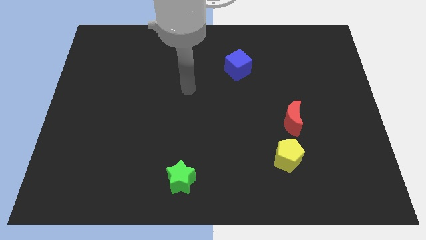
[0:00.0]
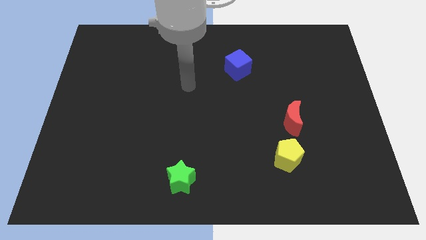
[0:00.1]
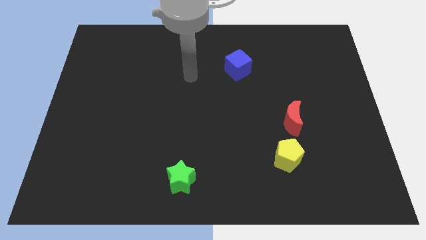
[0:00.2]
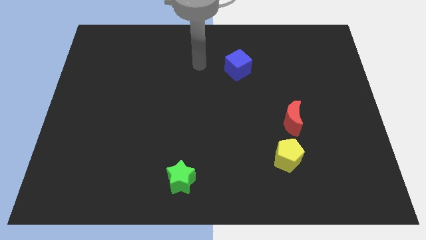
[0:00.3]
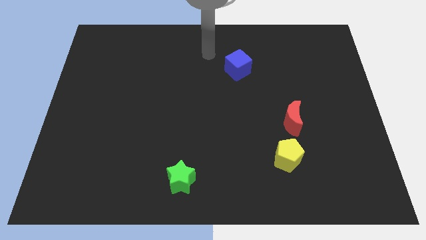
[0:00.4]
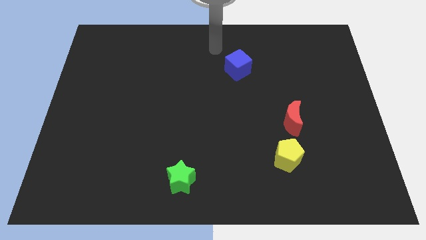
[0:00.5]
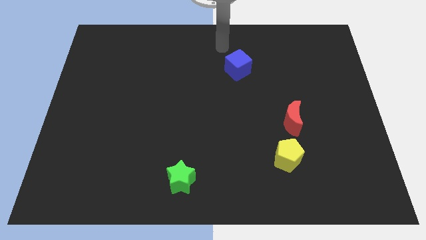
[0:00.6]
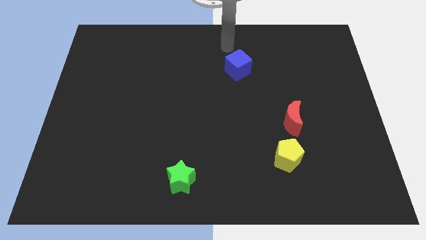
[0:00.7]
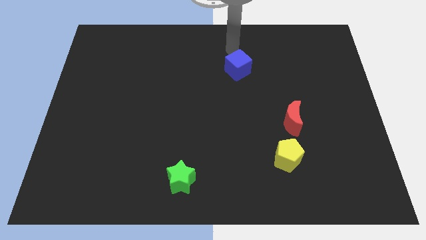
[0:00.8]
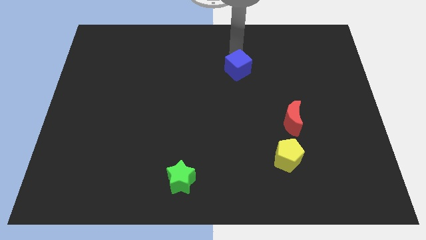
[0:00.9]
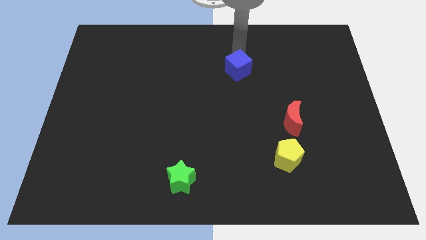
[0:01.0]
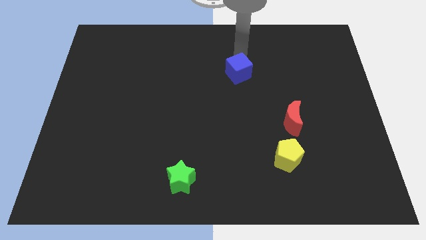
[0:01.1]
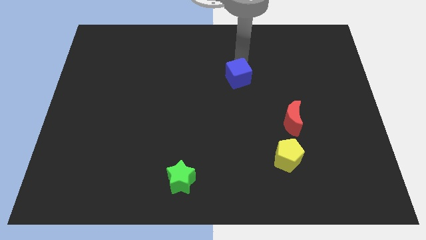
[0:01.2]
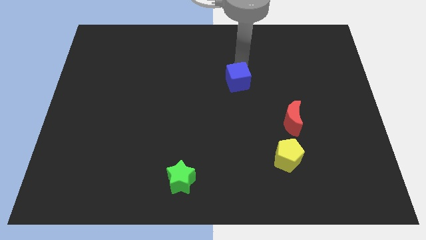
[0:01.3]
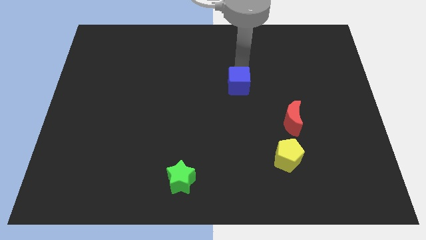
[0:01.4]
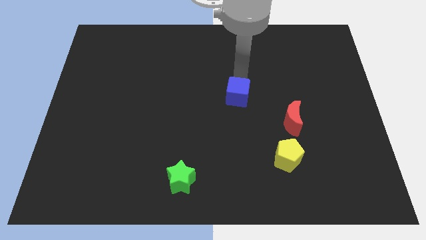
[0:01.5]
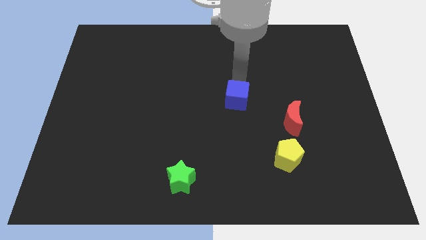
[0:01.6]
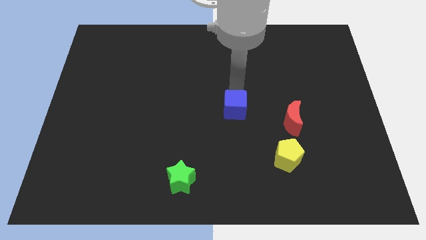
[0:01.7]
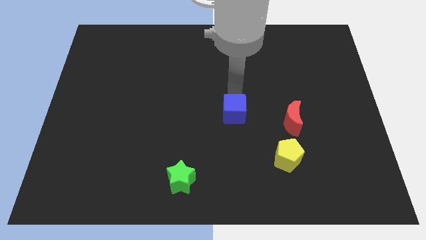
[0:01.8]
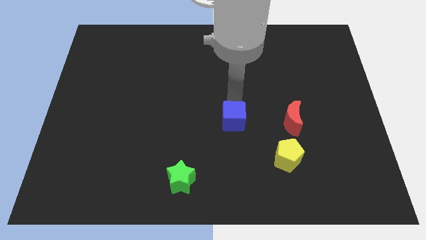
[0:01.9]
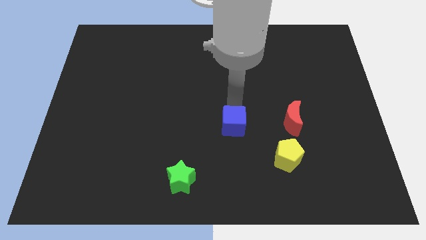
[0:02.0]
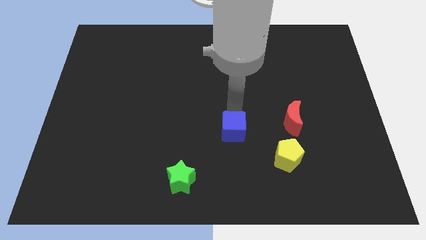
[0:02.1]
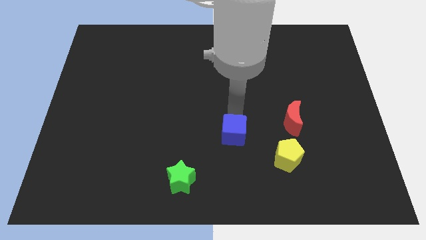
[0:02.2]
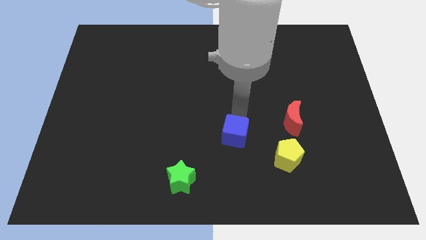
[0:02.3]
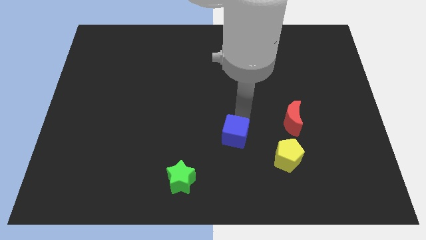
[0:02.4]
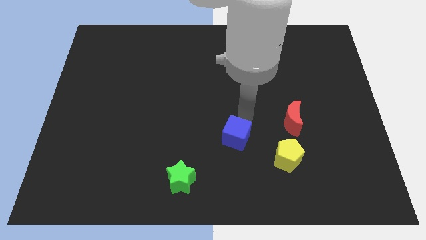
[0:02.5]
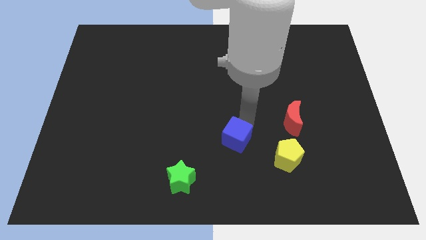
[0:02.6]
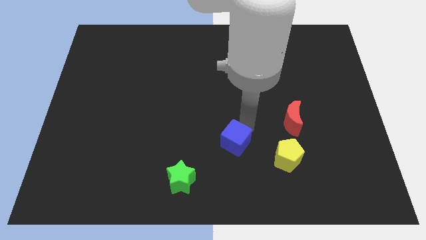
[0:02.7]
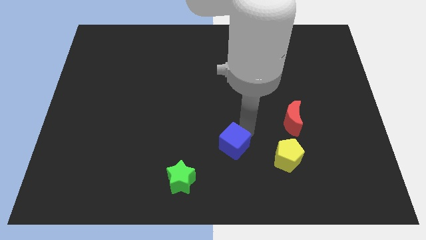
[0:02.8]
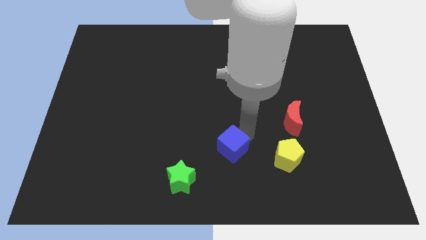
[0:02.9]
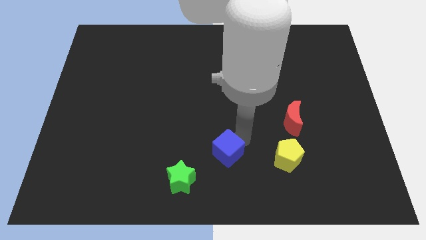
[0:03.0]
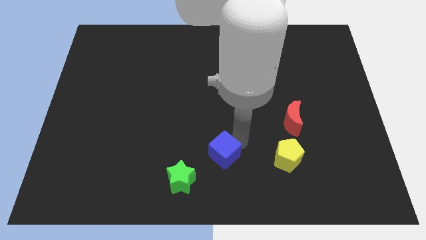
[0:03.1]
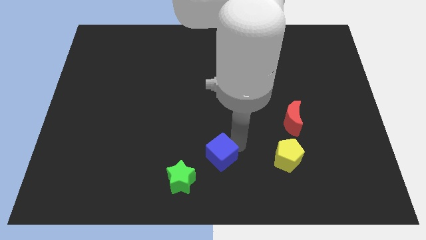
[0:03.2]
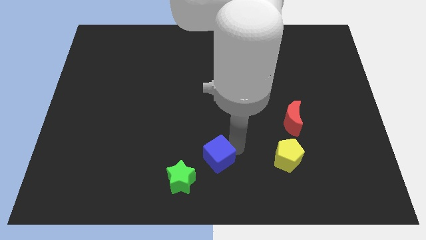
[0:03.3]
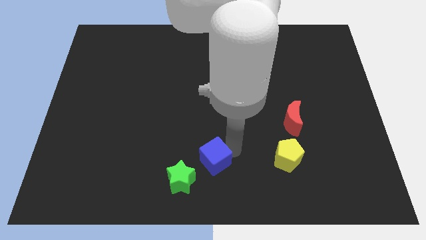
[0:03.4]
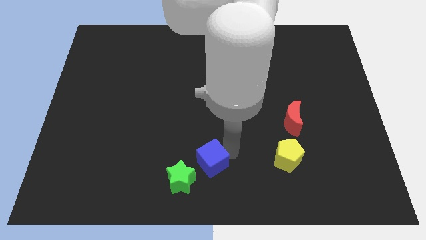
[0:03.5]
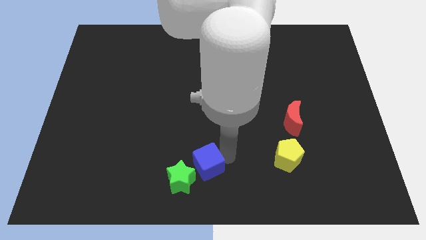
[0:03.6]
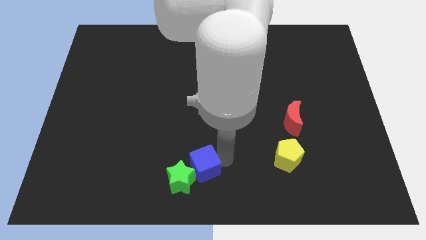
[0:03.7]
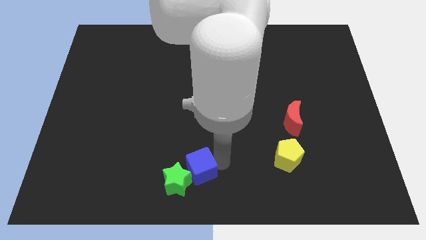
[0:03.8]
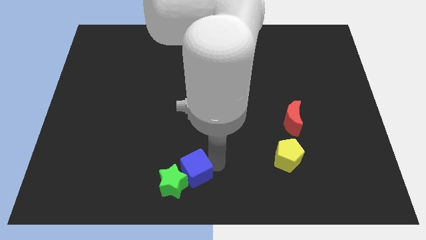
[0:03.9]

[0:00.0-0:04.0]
slide the blue cube towards the star

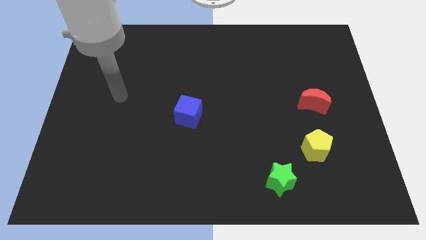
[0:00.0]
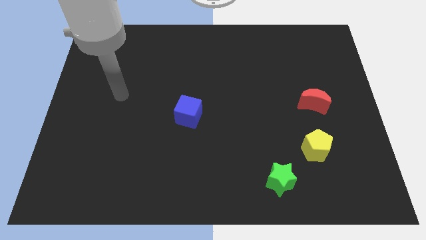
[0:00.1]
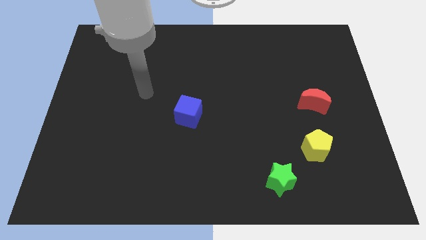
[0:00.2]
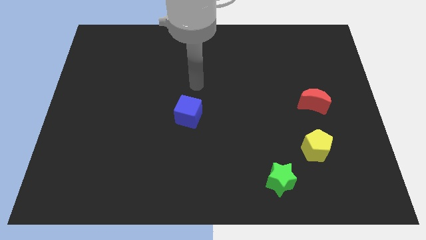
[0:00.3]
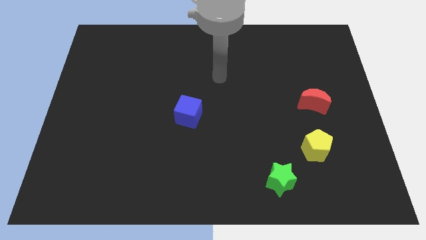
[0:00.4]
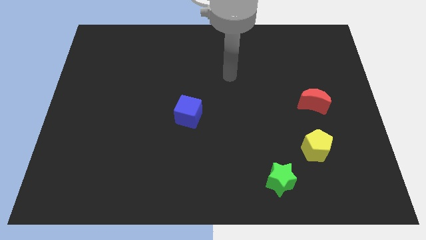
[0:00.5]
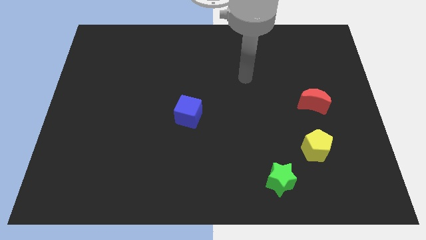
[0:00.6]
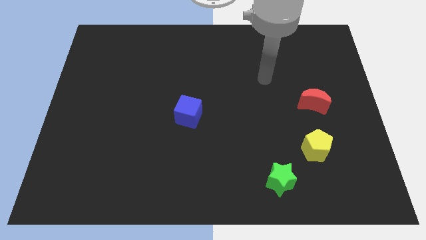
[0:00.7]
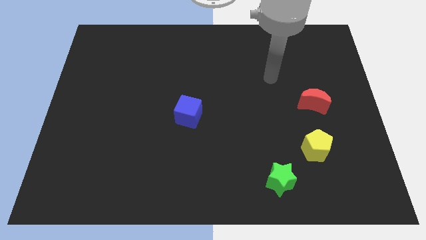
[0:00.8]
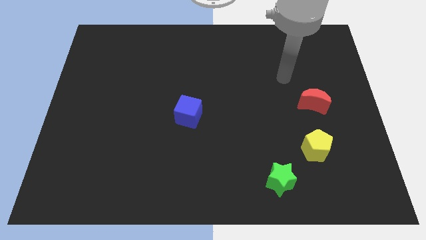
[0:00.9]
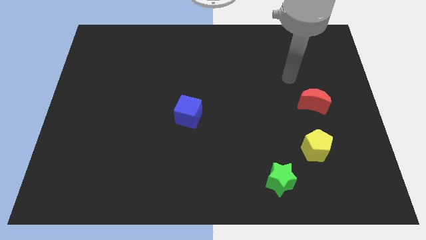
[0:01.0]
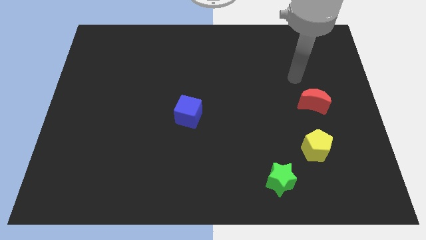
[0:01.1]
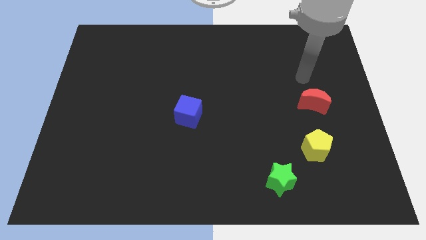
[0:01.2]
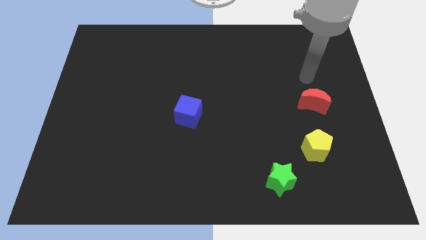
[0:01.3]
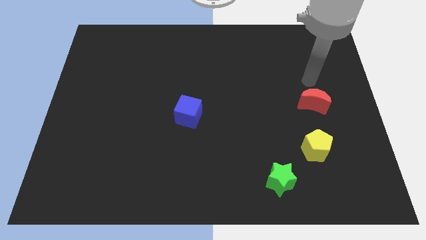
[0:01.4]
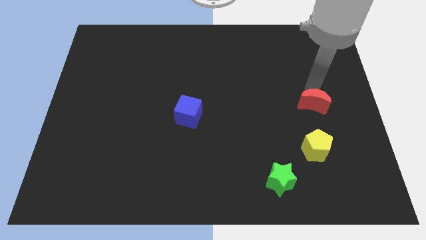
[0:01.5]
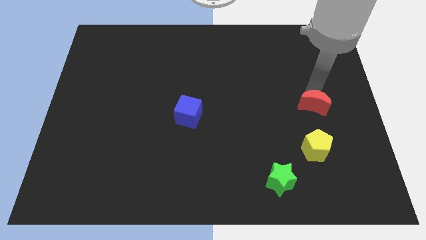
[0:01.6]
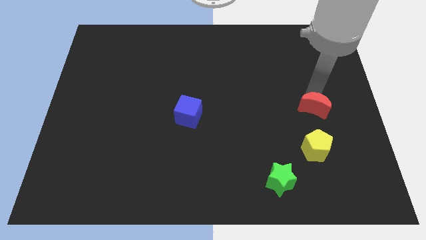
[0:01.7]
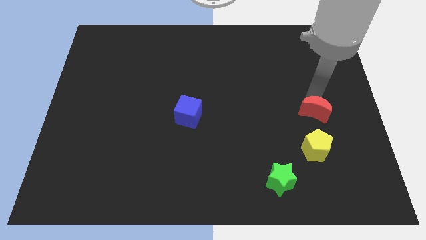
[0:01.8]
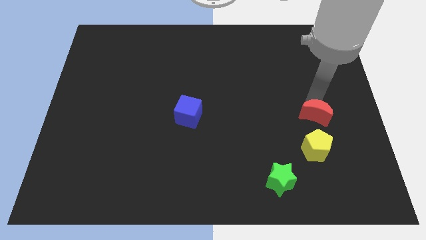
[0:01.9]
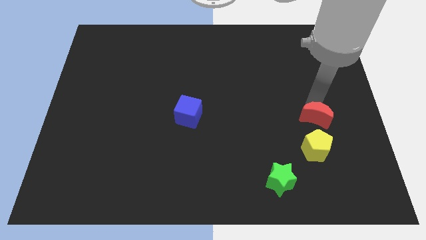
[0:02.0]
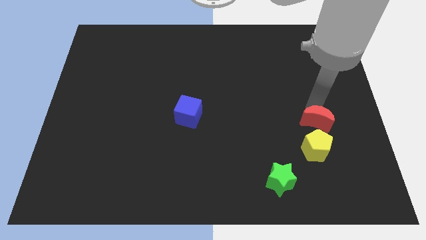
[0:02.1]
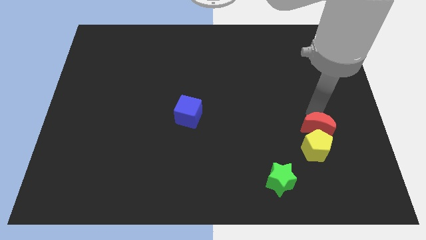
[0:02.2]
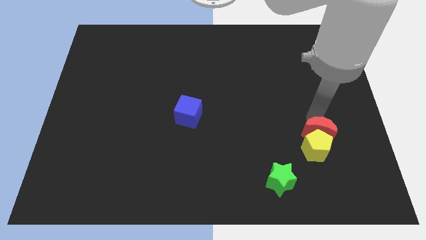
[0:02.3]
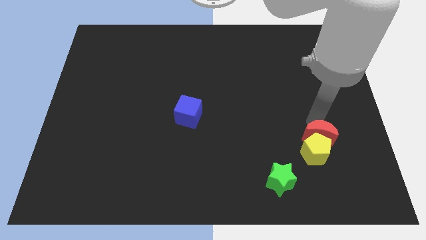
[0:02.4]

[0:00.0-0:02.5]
put the moon towards the yellow pentagon

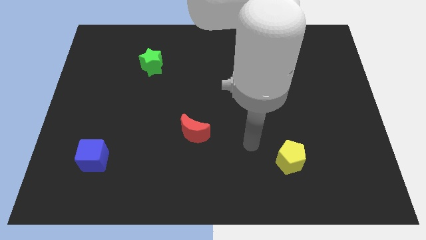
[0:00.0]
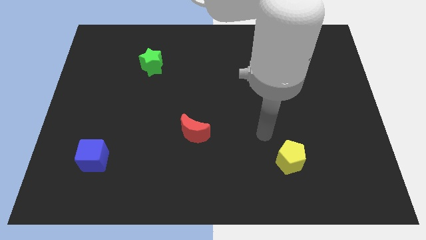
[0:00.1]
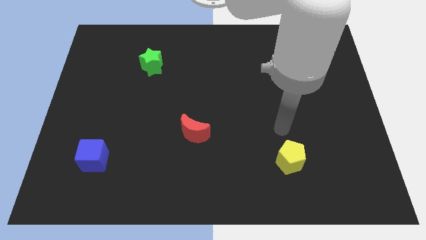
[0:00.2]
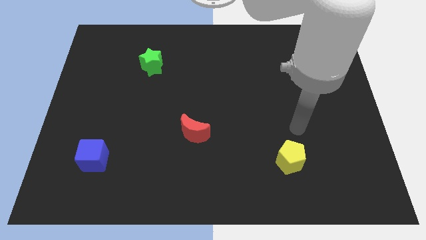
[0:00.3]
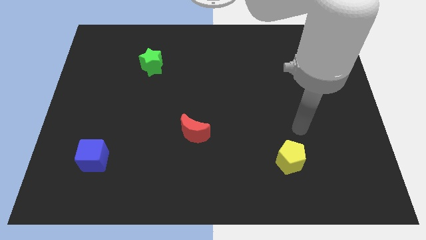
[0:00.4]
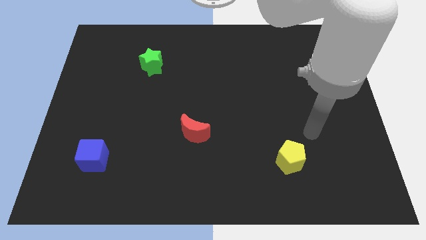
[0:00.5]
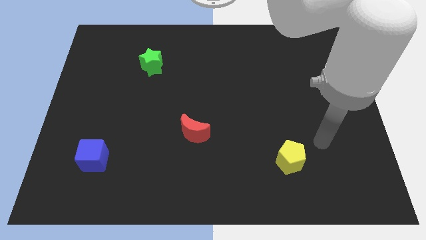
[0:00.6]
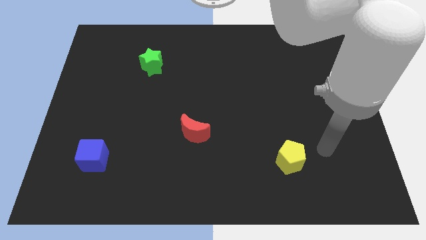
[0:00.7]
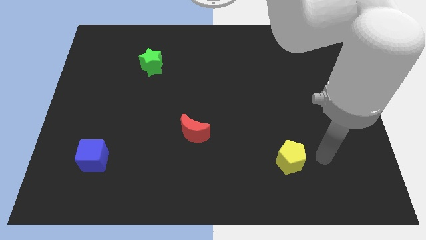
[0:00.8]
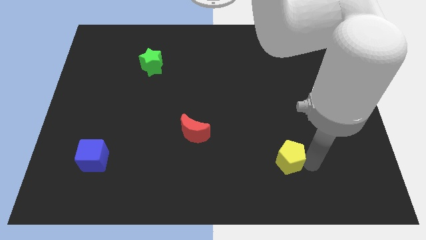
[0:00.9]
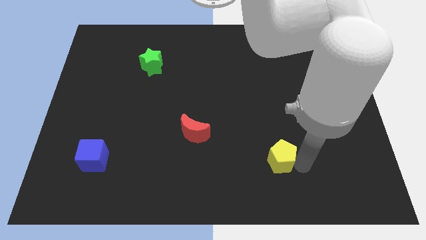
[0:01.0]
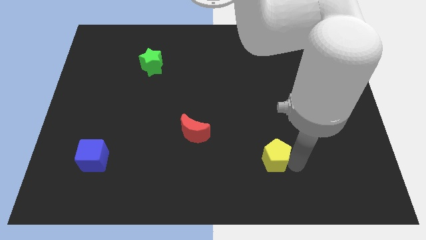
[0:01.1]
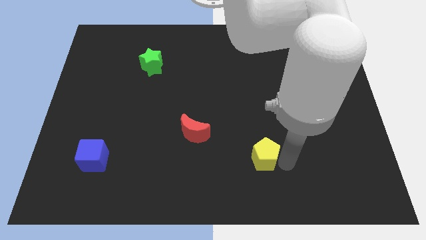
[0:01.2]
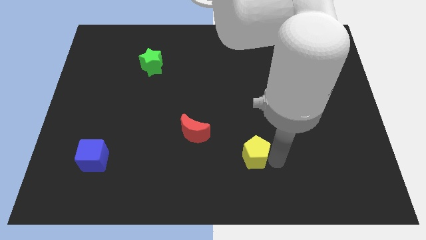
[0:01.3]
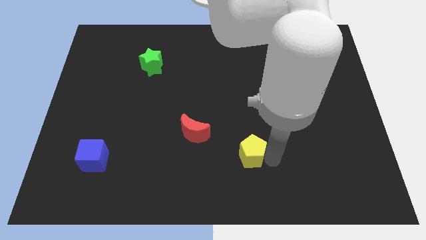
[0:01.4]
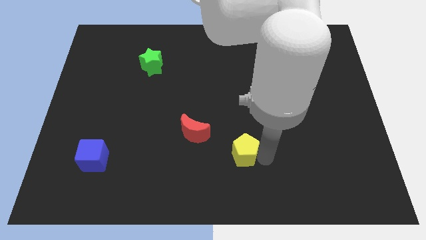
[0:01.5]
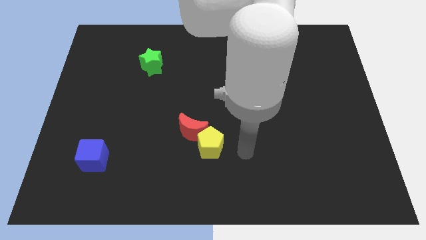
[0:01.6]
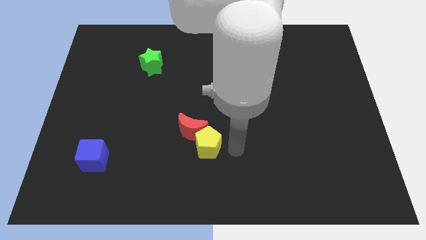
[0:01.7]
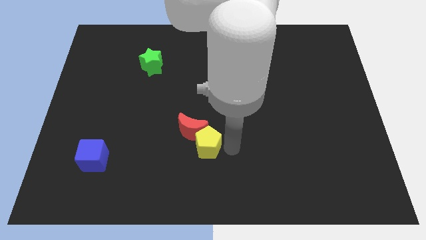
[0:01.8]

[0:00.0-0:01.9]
push the yellow pentagon to the red moon
